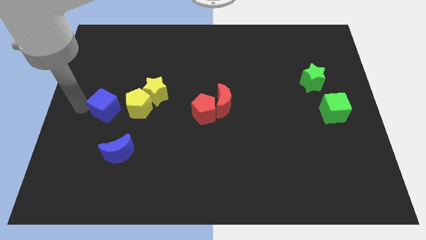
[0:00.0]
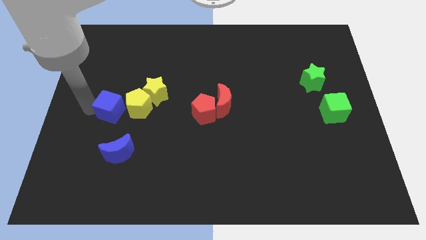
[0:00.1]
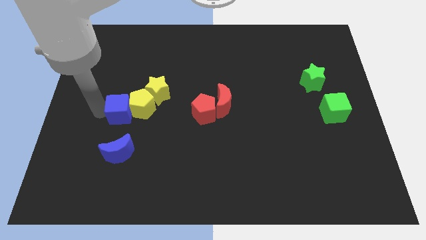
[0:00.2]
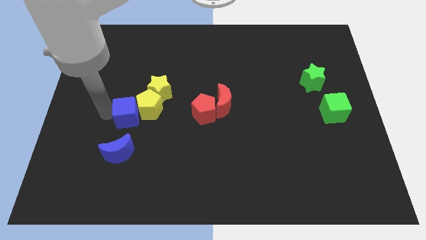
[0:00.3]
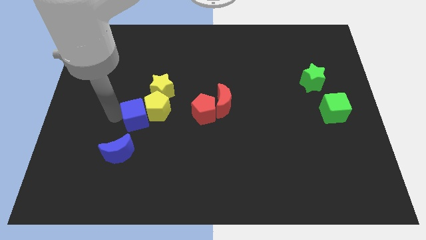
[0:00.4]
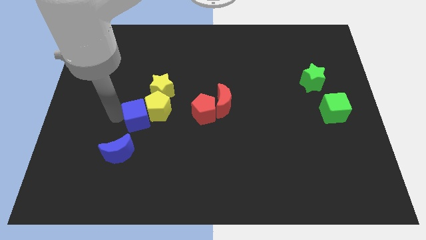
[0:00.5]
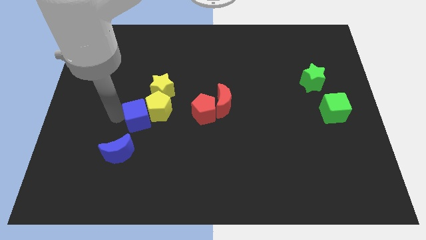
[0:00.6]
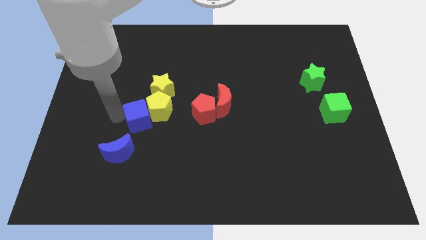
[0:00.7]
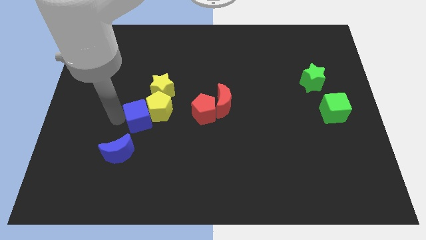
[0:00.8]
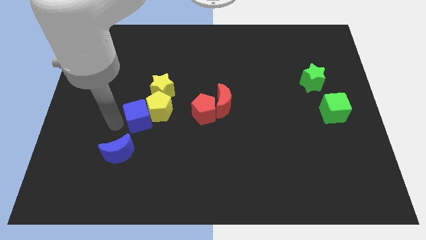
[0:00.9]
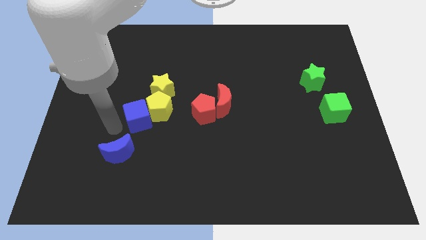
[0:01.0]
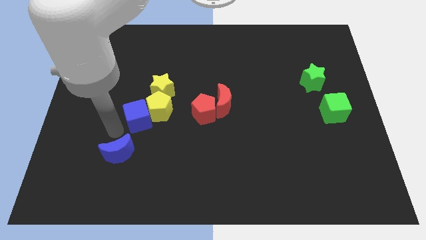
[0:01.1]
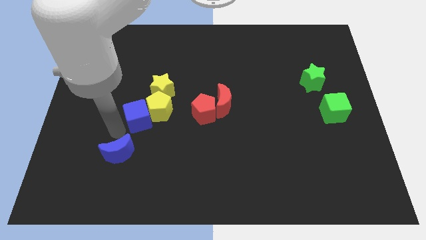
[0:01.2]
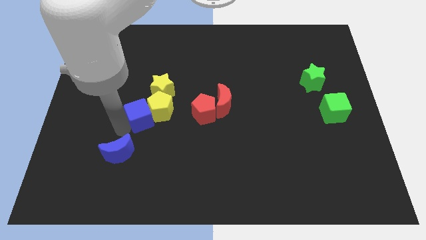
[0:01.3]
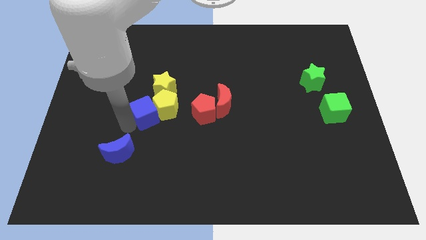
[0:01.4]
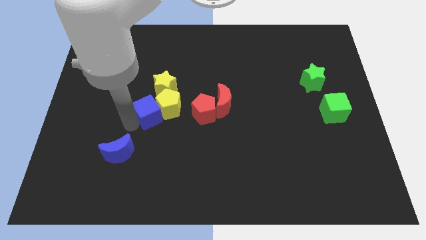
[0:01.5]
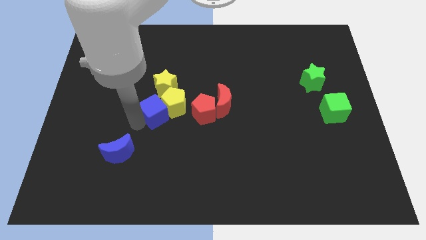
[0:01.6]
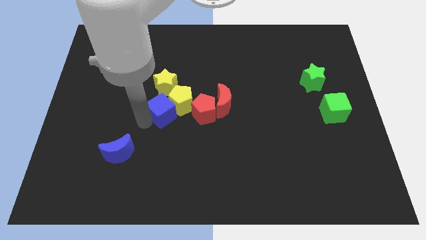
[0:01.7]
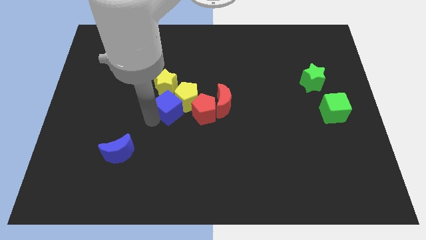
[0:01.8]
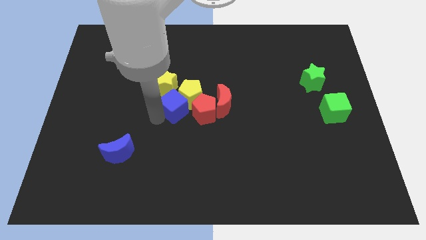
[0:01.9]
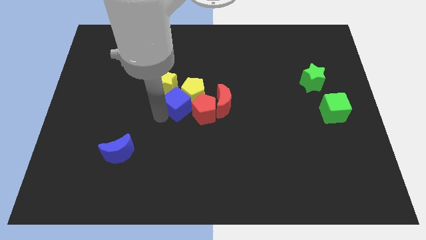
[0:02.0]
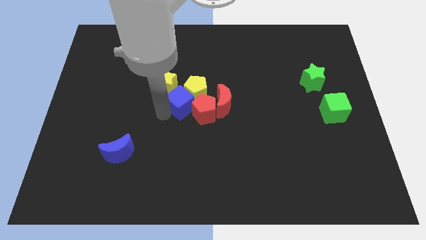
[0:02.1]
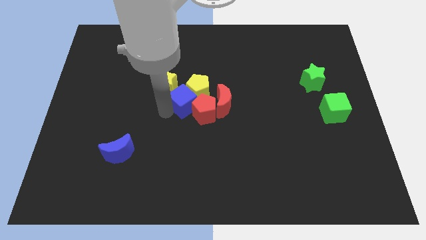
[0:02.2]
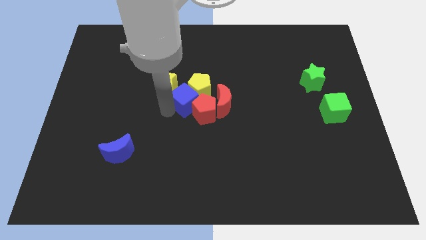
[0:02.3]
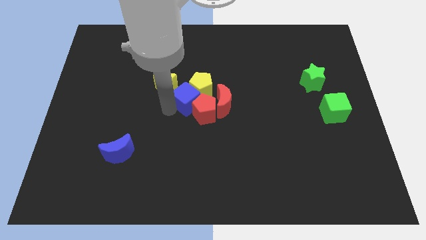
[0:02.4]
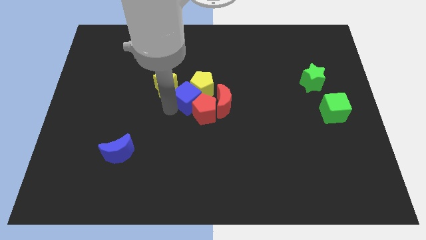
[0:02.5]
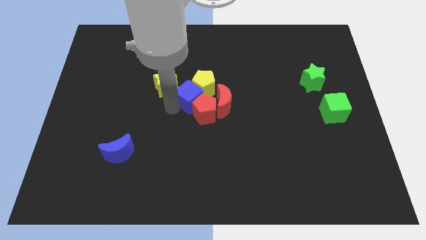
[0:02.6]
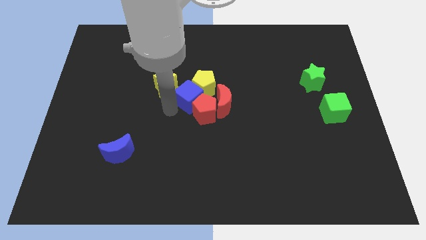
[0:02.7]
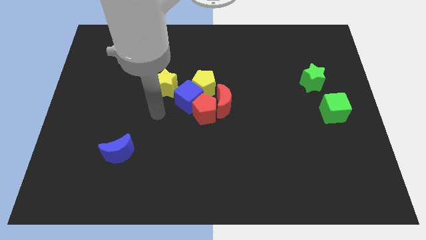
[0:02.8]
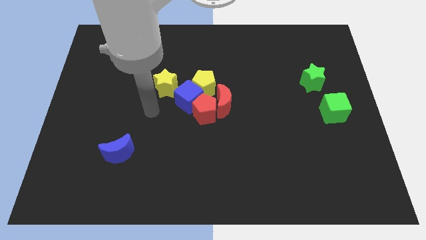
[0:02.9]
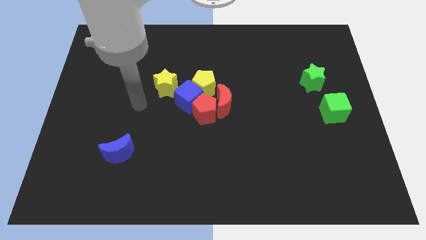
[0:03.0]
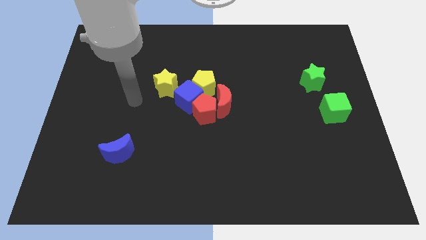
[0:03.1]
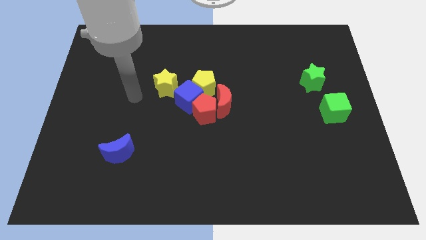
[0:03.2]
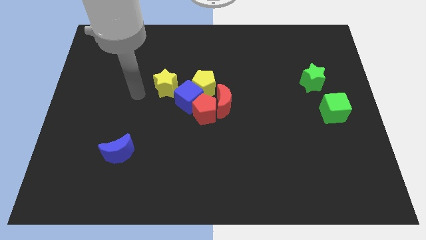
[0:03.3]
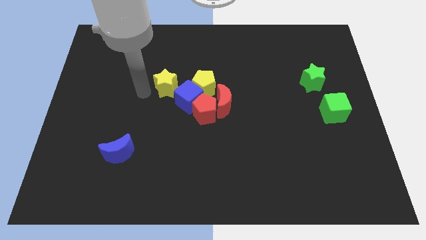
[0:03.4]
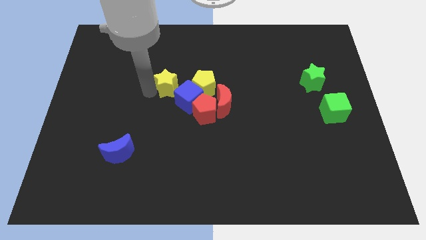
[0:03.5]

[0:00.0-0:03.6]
push the yellow pentagon with the blue cube

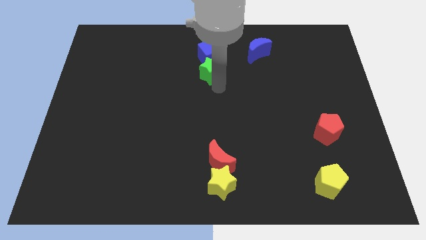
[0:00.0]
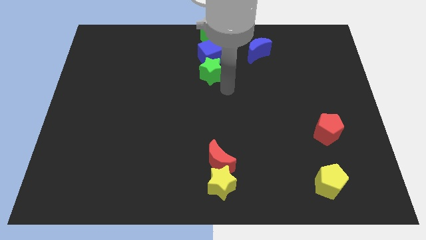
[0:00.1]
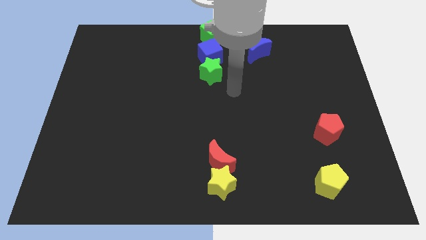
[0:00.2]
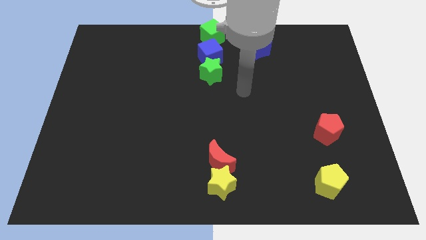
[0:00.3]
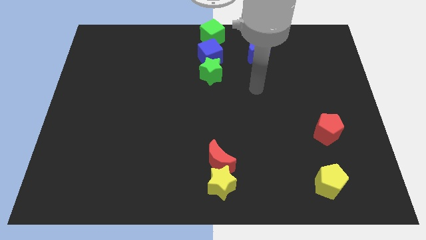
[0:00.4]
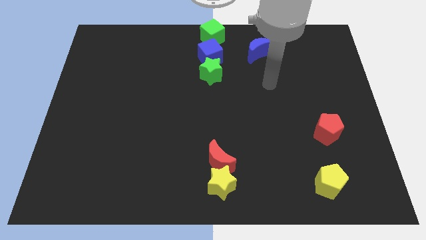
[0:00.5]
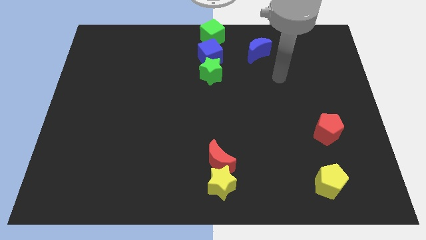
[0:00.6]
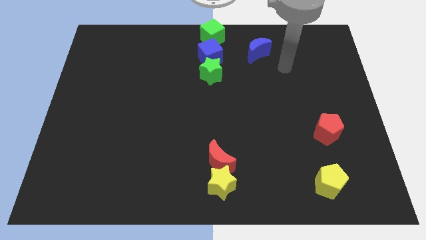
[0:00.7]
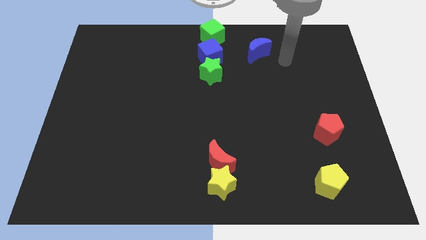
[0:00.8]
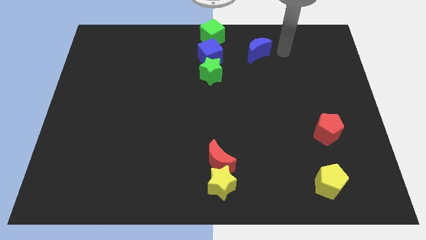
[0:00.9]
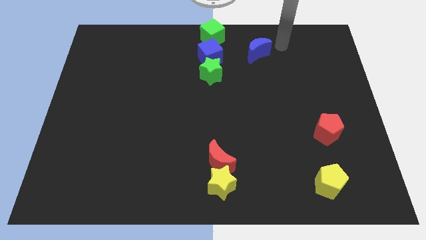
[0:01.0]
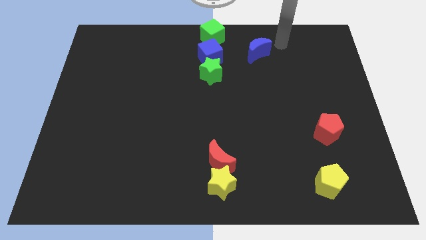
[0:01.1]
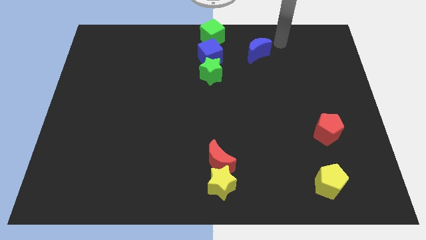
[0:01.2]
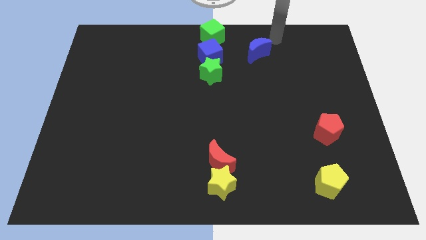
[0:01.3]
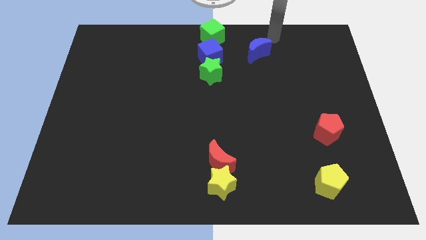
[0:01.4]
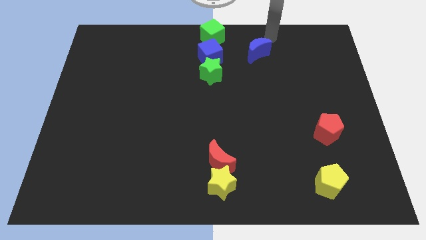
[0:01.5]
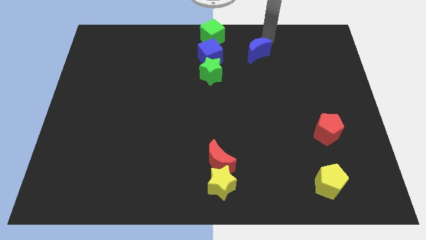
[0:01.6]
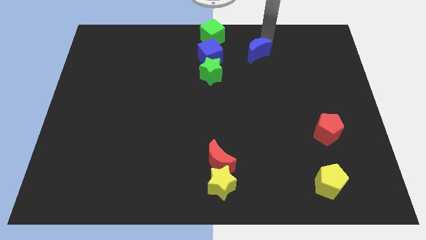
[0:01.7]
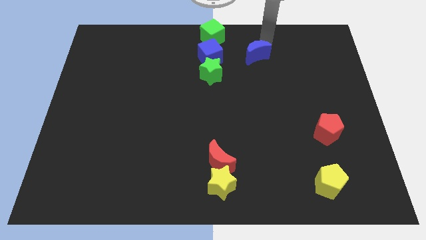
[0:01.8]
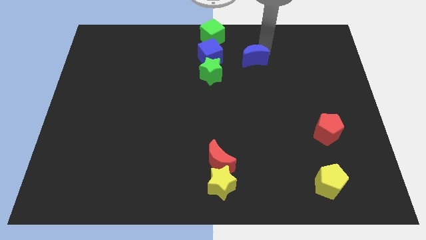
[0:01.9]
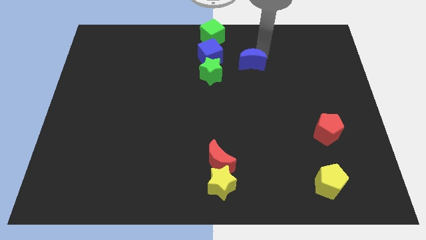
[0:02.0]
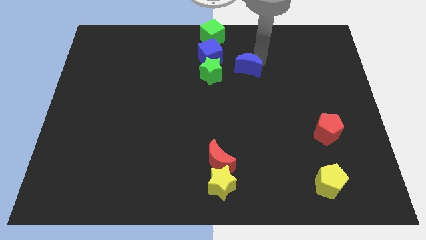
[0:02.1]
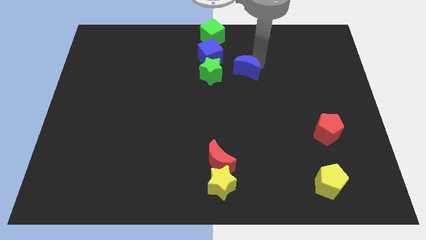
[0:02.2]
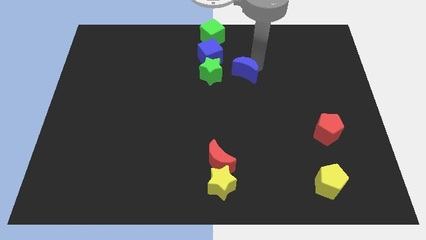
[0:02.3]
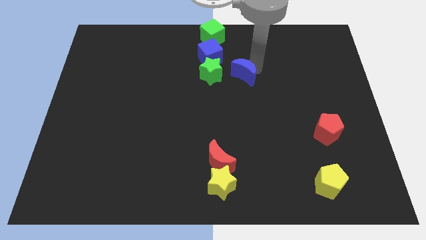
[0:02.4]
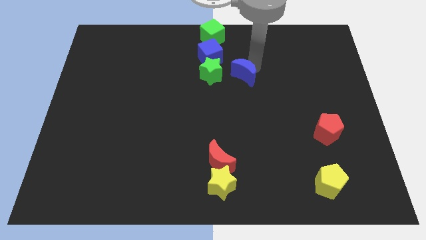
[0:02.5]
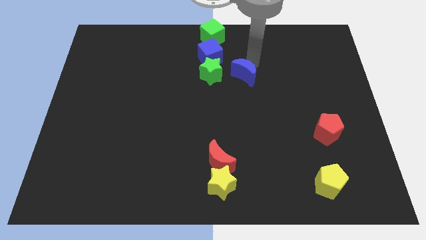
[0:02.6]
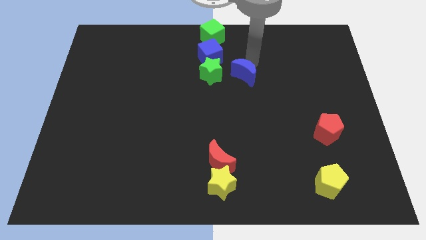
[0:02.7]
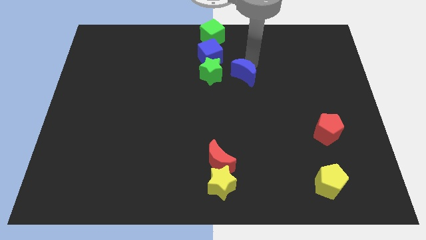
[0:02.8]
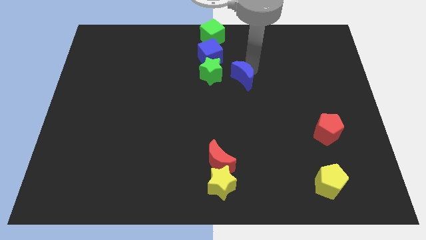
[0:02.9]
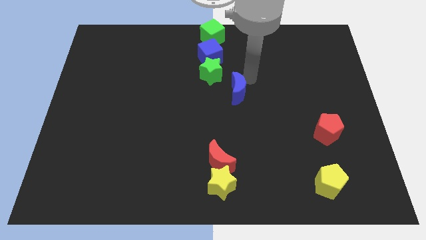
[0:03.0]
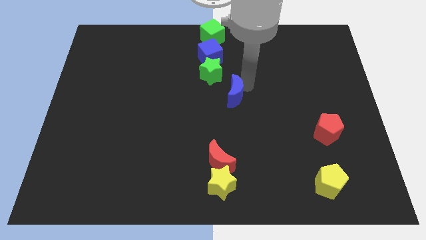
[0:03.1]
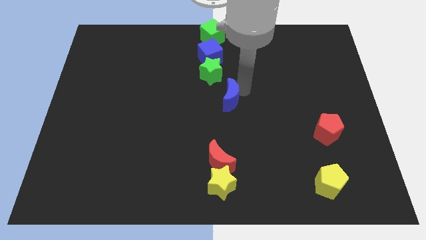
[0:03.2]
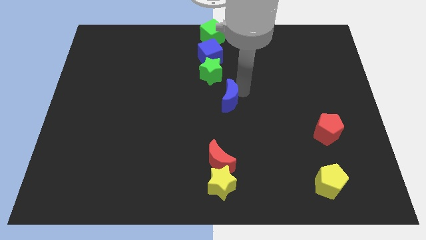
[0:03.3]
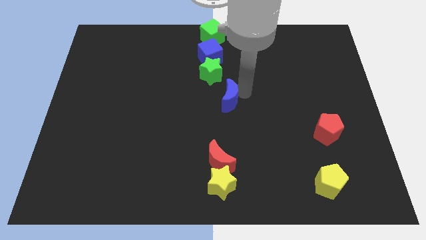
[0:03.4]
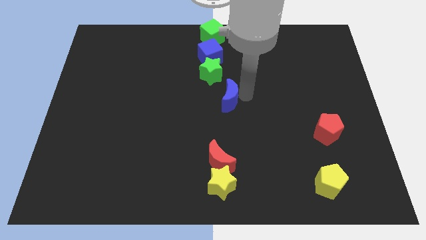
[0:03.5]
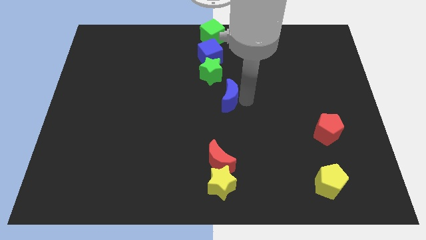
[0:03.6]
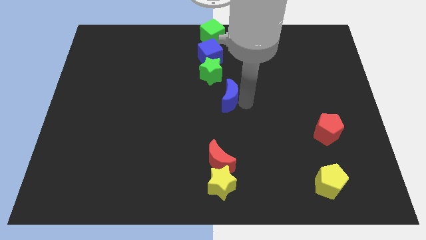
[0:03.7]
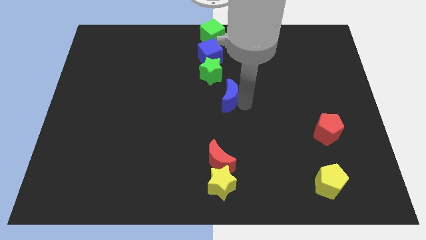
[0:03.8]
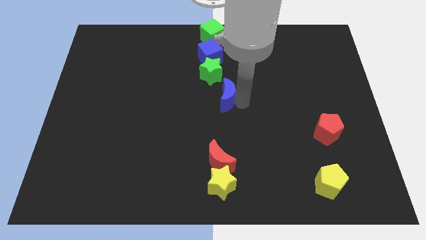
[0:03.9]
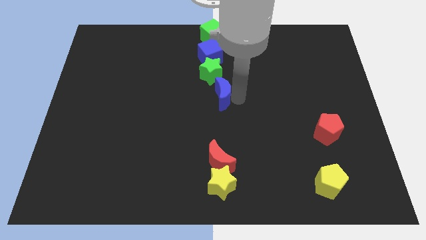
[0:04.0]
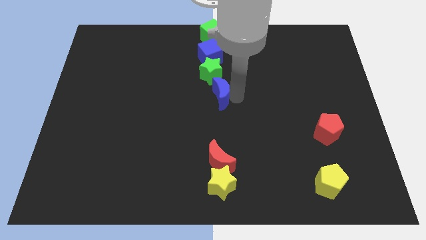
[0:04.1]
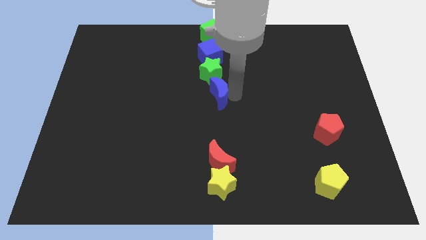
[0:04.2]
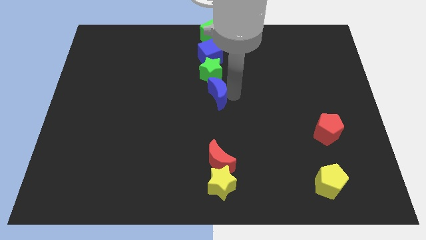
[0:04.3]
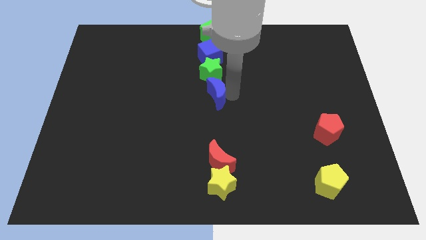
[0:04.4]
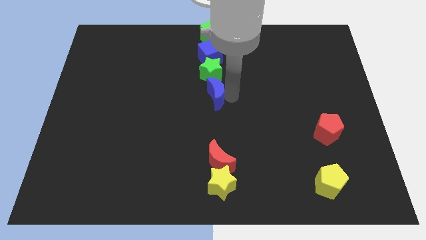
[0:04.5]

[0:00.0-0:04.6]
place the blue moon under the green star

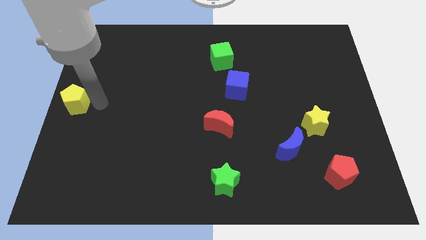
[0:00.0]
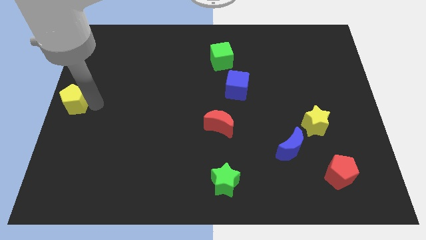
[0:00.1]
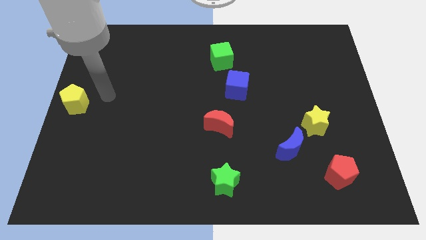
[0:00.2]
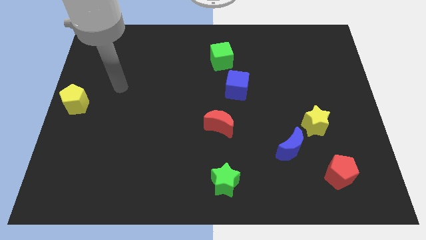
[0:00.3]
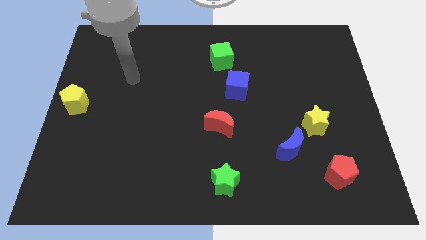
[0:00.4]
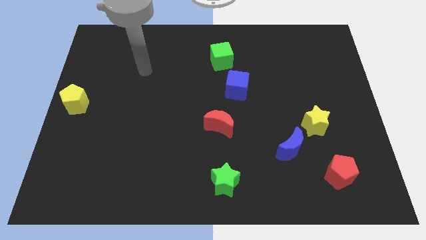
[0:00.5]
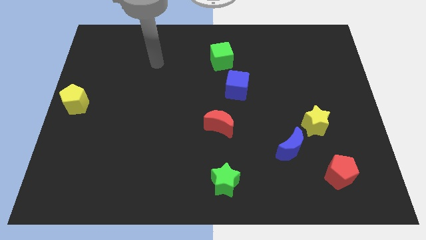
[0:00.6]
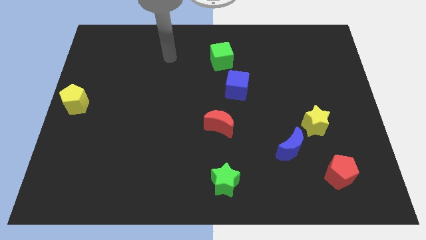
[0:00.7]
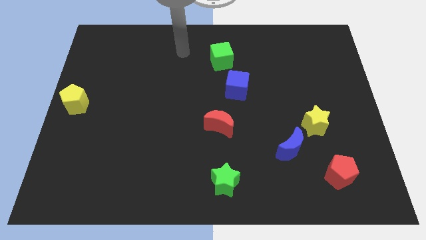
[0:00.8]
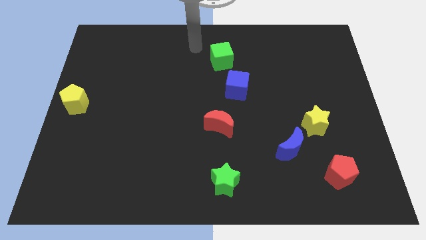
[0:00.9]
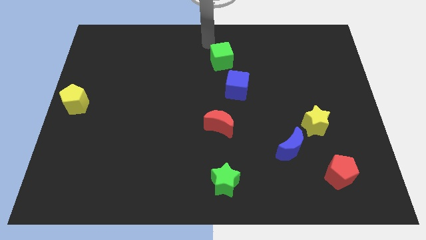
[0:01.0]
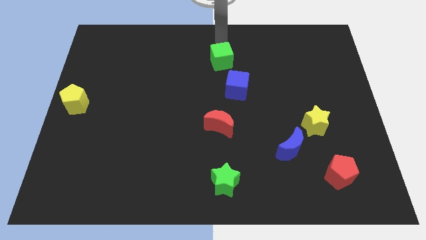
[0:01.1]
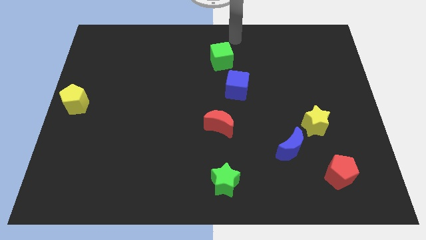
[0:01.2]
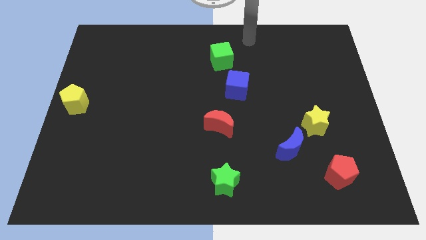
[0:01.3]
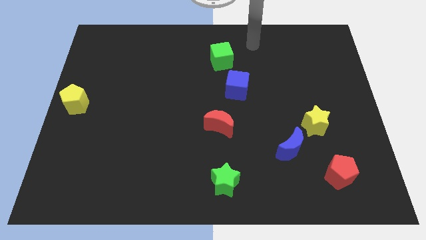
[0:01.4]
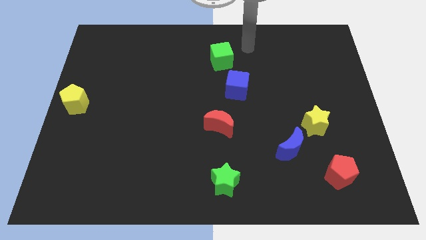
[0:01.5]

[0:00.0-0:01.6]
put your hand diagonally towards the top center of the board
